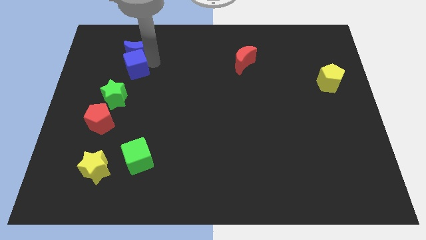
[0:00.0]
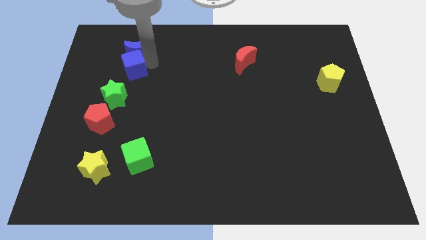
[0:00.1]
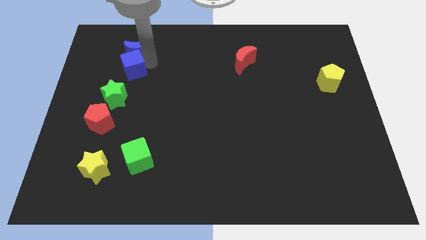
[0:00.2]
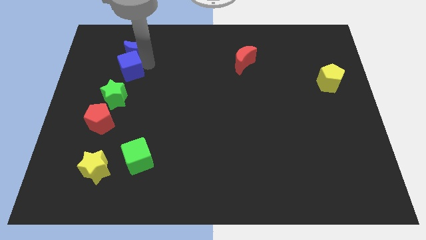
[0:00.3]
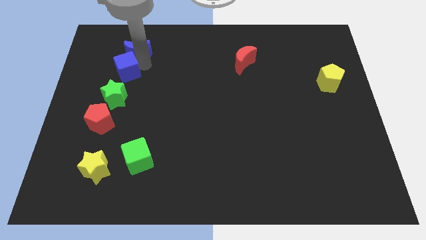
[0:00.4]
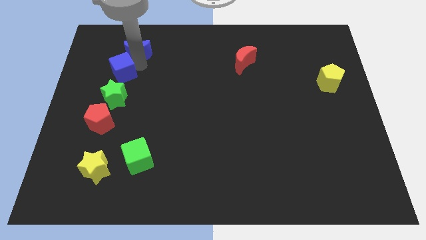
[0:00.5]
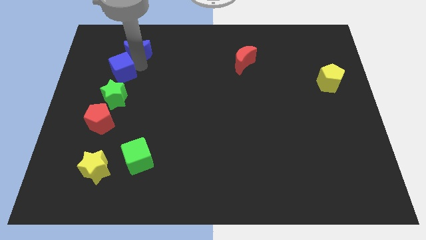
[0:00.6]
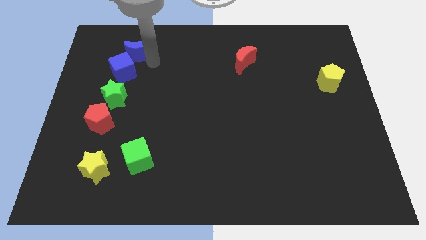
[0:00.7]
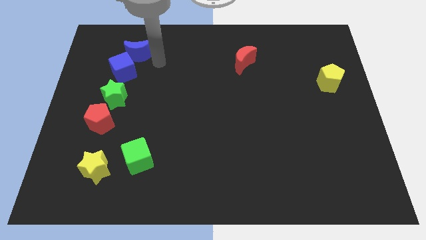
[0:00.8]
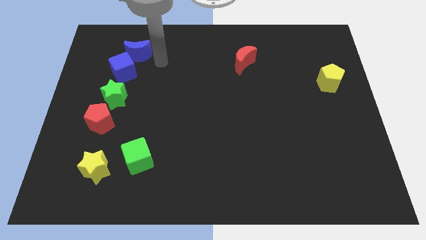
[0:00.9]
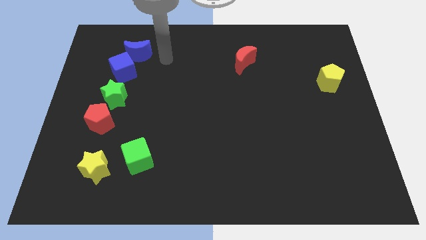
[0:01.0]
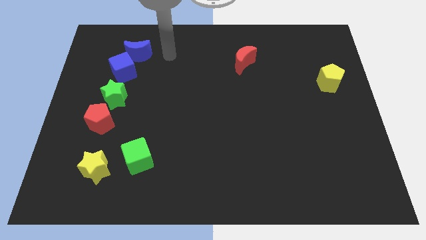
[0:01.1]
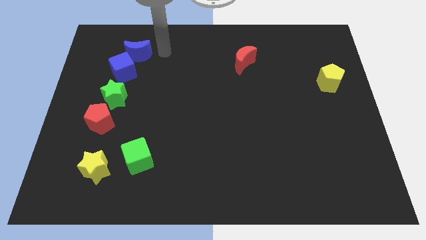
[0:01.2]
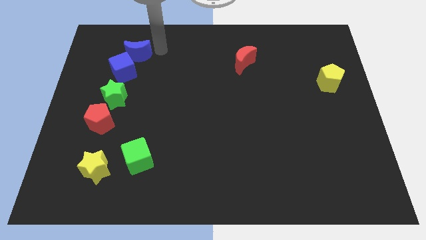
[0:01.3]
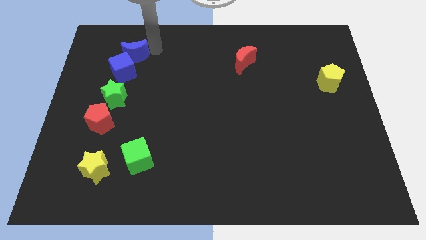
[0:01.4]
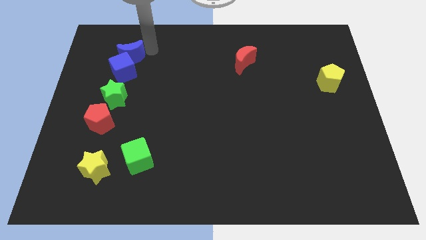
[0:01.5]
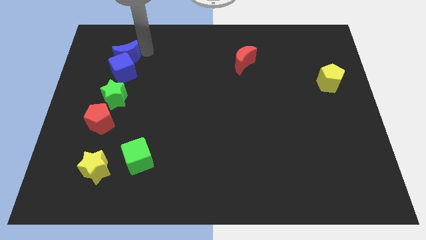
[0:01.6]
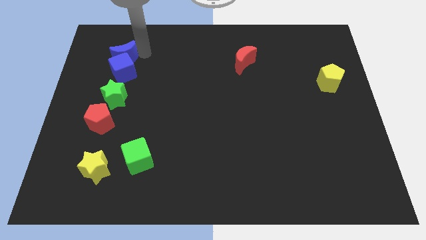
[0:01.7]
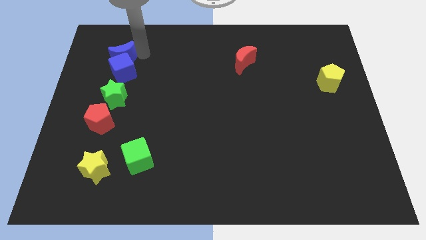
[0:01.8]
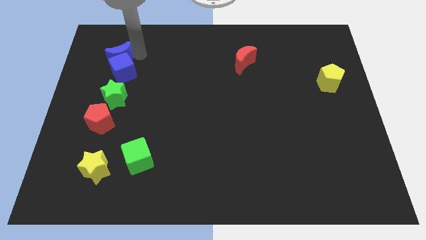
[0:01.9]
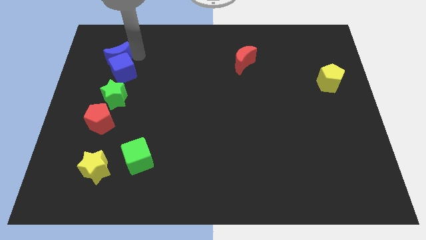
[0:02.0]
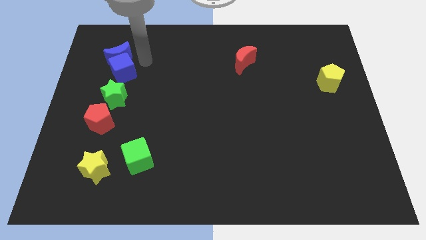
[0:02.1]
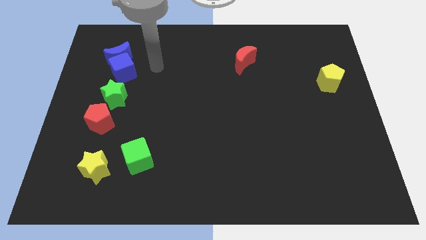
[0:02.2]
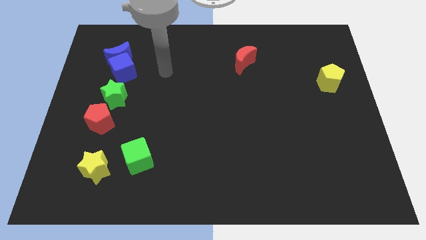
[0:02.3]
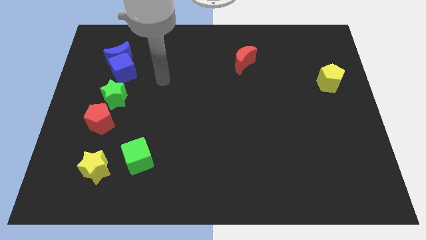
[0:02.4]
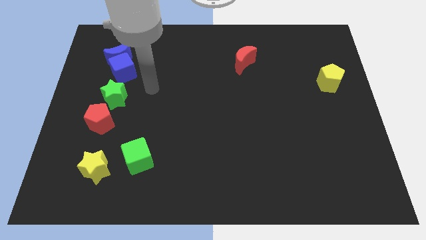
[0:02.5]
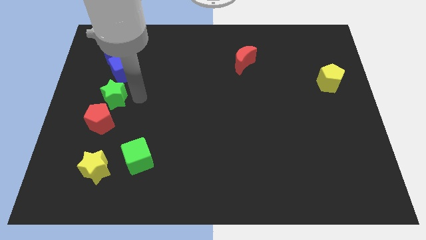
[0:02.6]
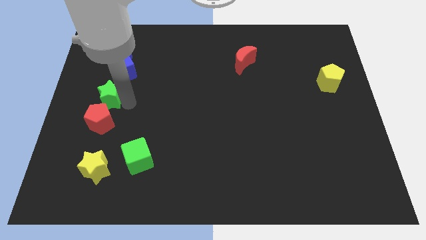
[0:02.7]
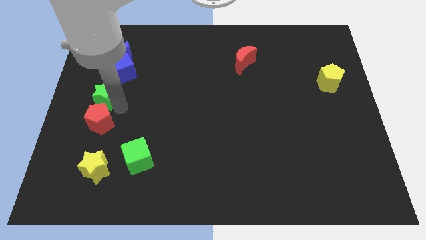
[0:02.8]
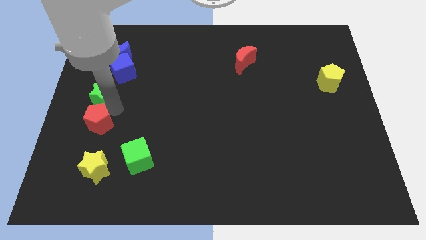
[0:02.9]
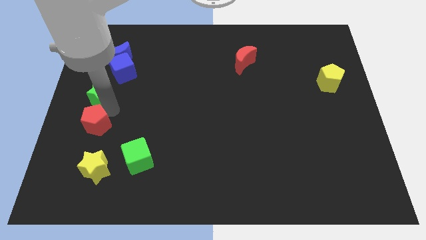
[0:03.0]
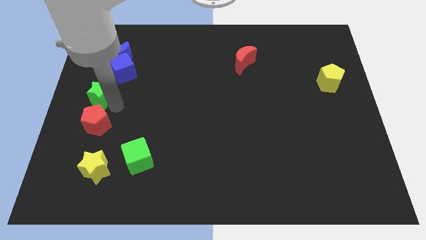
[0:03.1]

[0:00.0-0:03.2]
move the blue crescent above to the blue cube

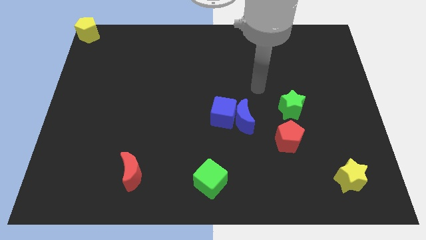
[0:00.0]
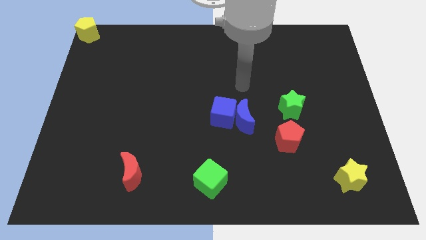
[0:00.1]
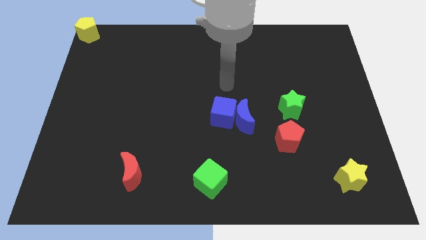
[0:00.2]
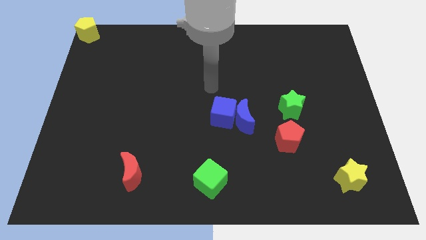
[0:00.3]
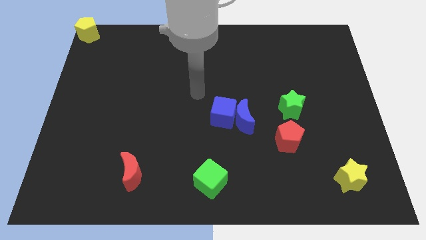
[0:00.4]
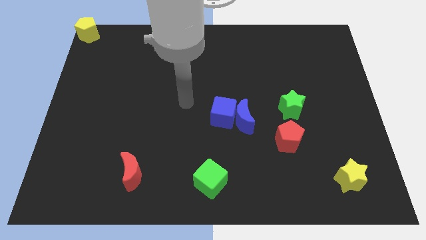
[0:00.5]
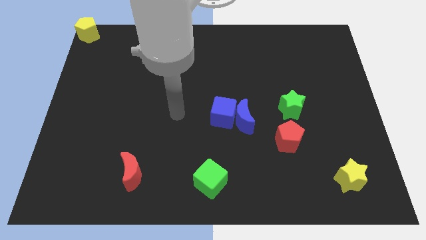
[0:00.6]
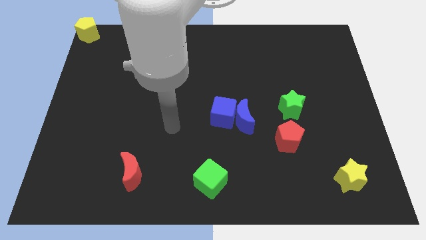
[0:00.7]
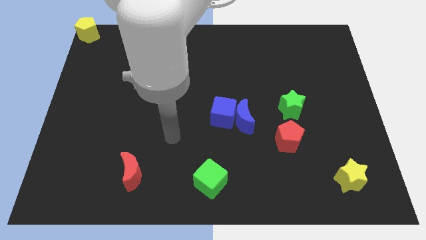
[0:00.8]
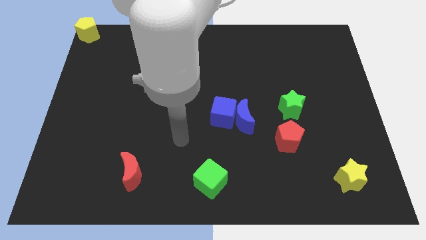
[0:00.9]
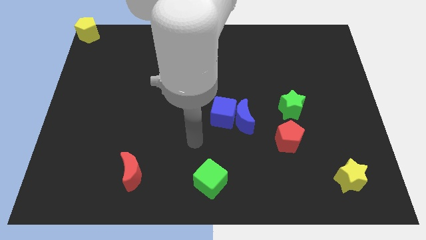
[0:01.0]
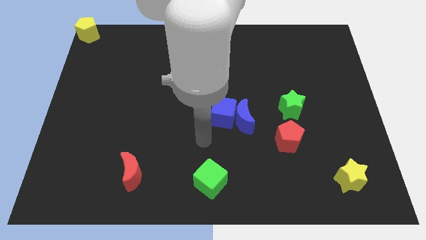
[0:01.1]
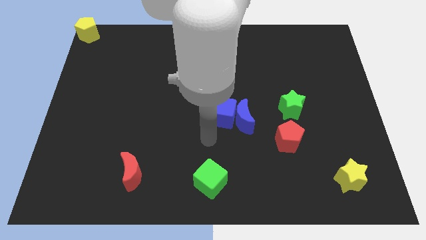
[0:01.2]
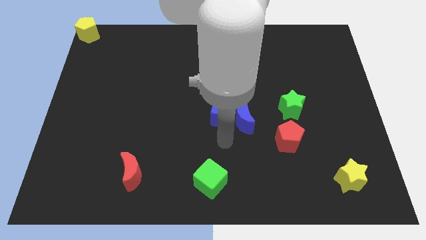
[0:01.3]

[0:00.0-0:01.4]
put your hand in between green and the blue cube

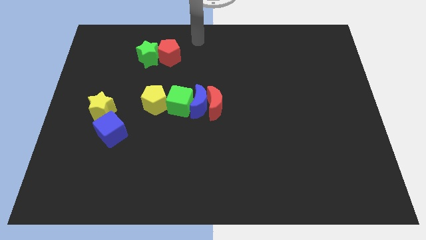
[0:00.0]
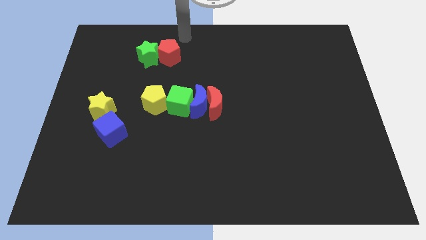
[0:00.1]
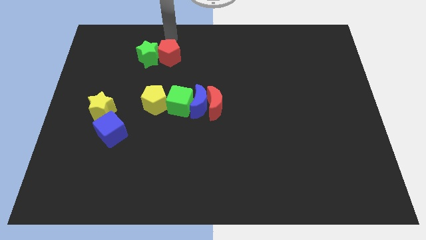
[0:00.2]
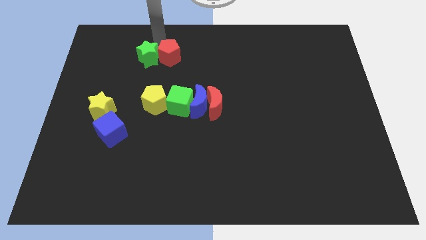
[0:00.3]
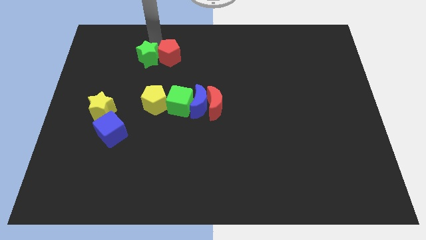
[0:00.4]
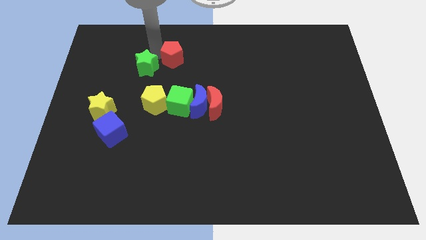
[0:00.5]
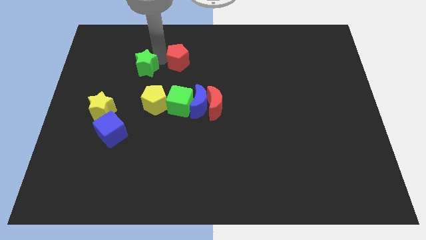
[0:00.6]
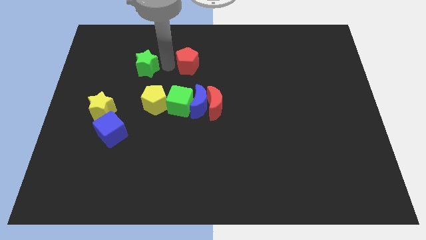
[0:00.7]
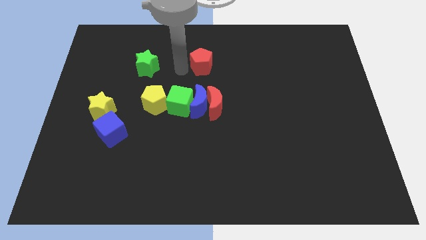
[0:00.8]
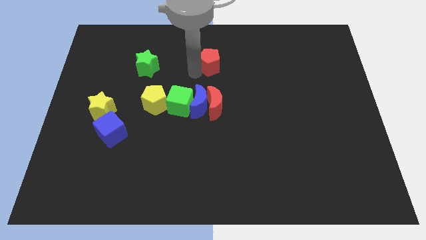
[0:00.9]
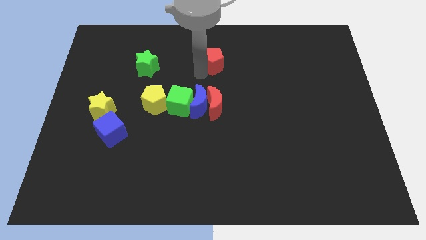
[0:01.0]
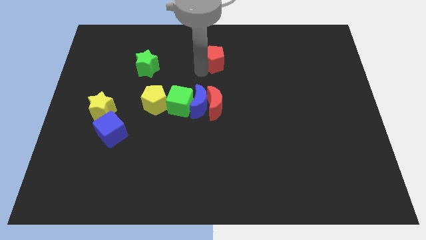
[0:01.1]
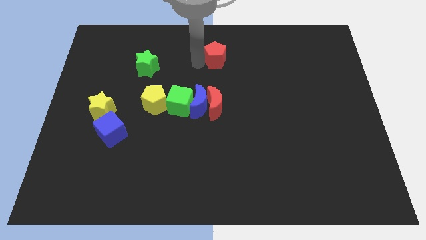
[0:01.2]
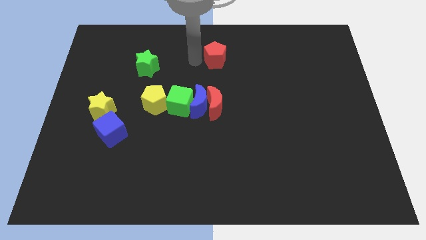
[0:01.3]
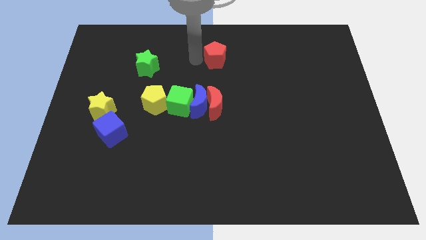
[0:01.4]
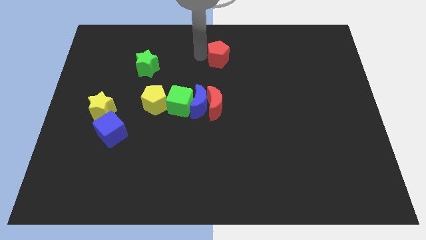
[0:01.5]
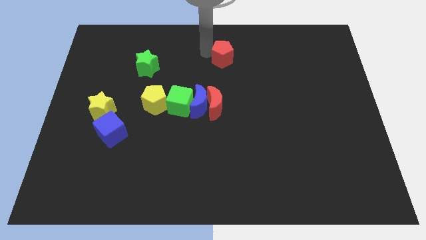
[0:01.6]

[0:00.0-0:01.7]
place the red pentagon above red moon

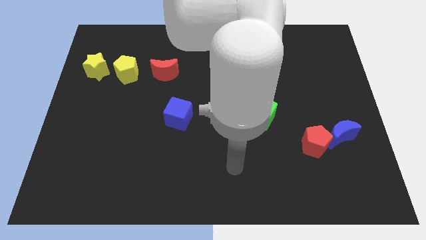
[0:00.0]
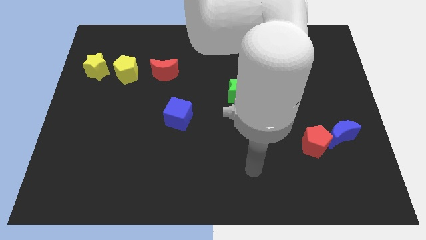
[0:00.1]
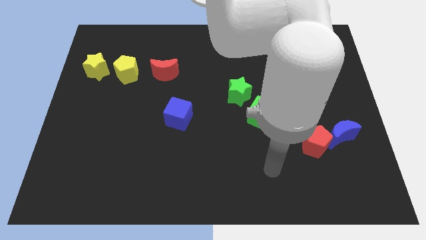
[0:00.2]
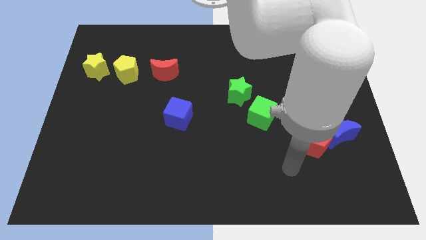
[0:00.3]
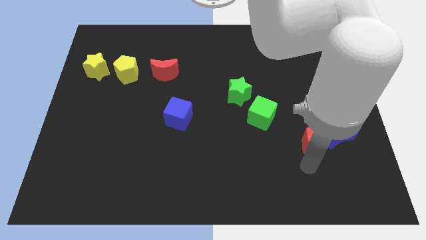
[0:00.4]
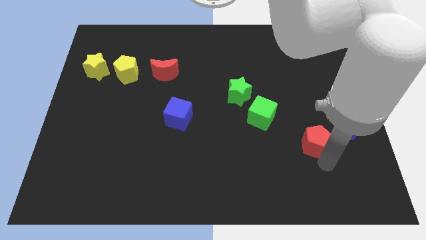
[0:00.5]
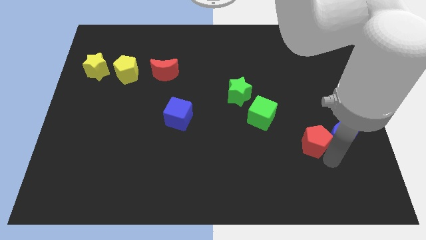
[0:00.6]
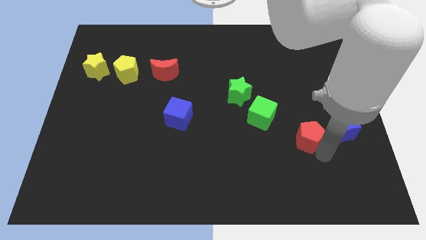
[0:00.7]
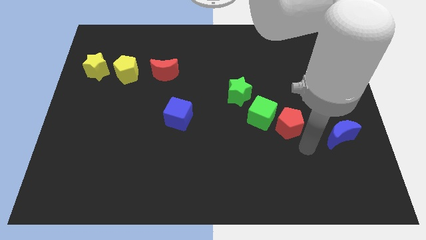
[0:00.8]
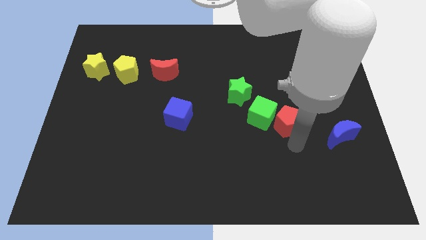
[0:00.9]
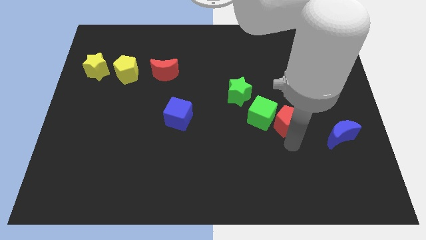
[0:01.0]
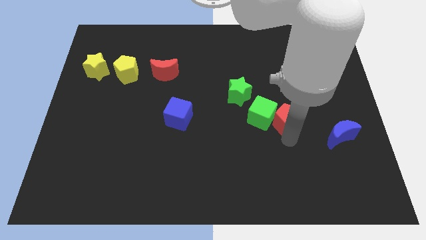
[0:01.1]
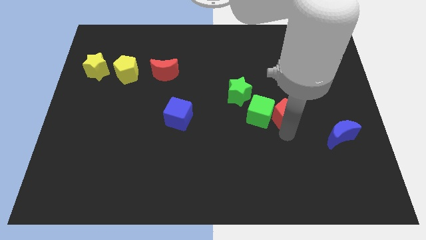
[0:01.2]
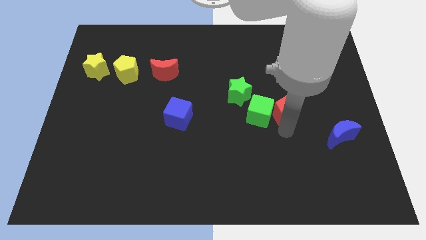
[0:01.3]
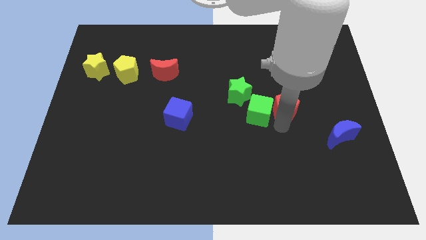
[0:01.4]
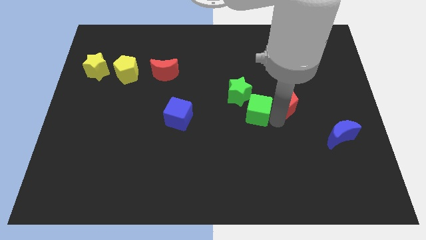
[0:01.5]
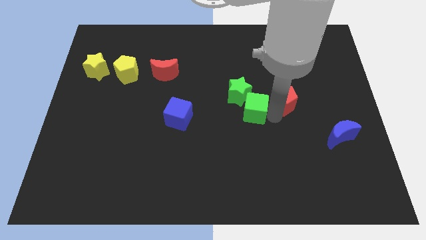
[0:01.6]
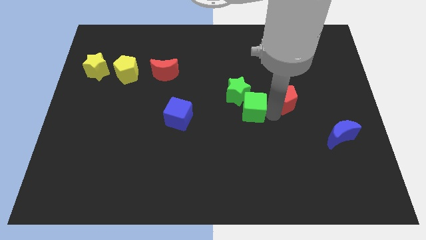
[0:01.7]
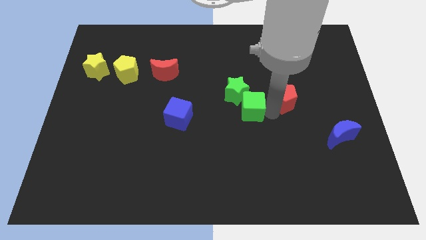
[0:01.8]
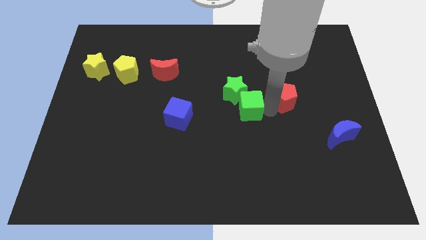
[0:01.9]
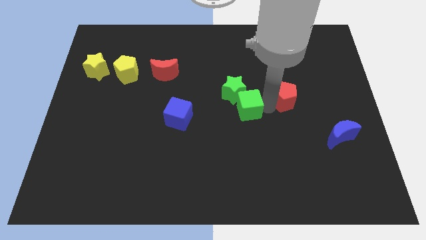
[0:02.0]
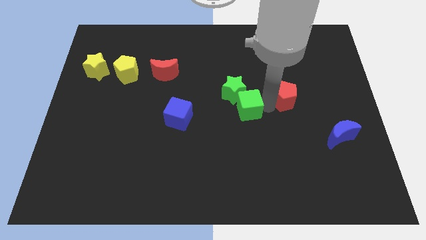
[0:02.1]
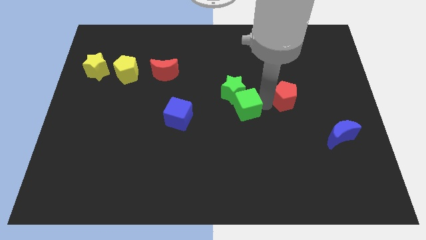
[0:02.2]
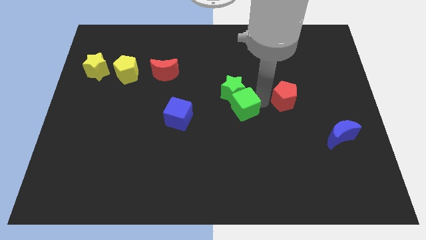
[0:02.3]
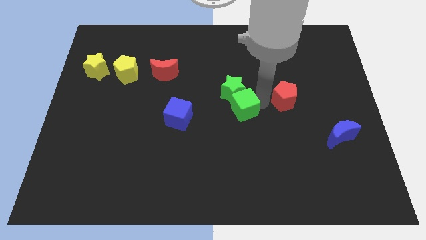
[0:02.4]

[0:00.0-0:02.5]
move the arm between the green cube and red pentagon

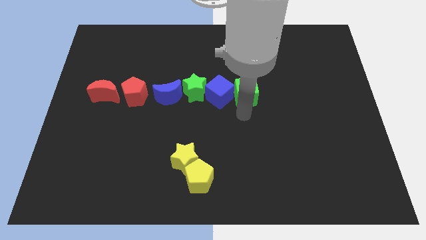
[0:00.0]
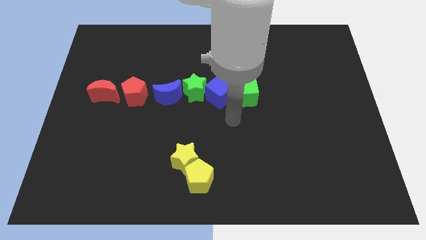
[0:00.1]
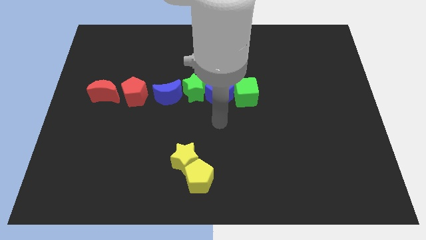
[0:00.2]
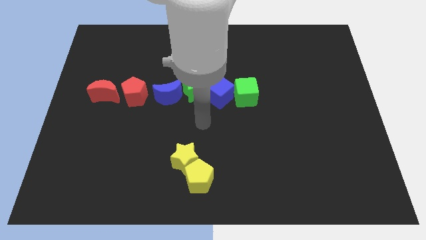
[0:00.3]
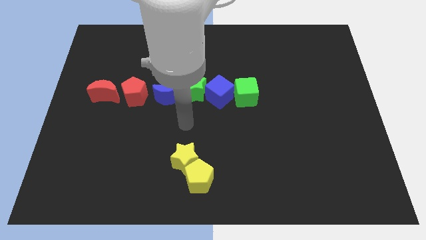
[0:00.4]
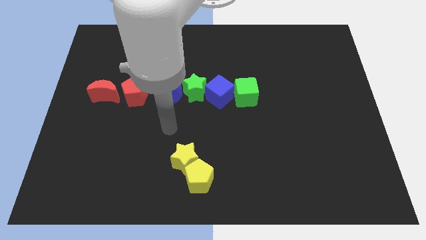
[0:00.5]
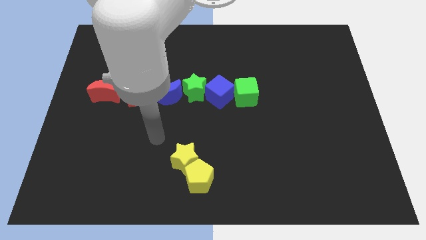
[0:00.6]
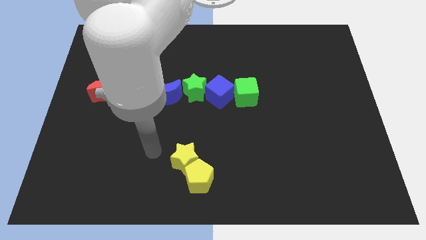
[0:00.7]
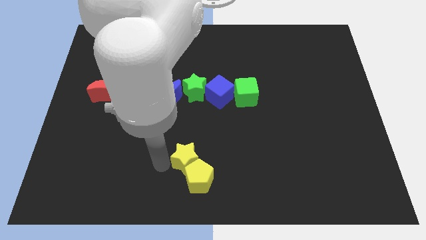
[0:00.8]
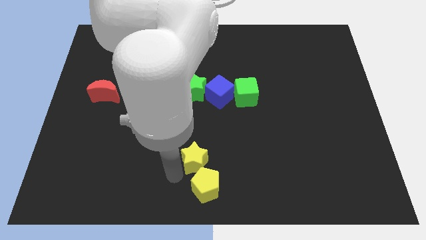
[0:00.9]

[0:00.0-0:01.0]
place arm left to the yellow star
